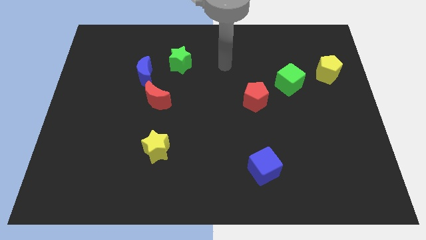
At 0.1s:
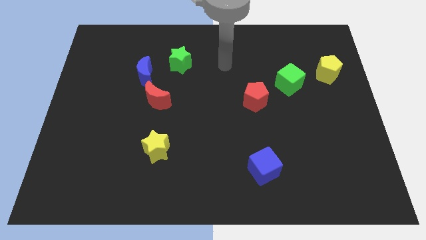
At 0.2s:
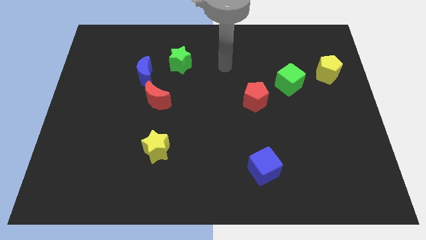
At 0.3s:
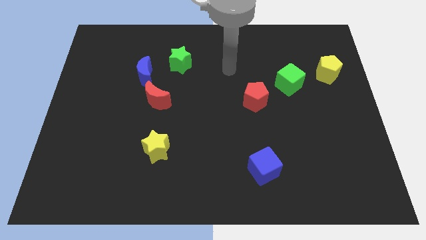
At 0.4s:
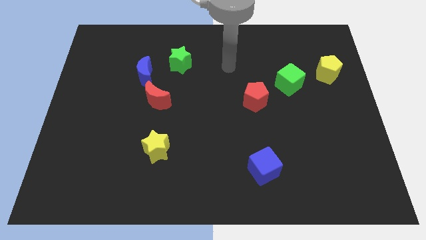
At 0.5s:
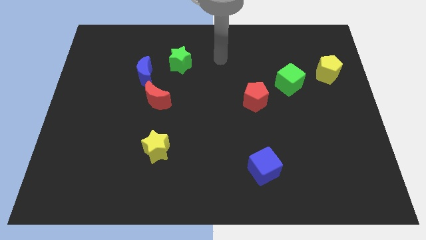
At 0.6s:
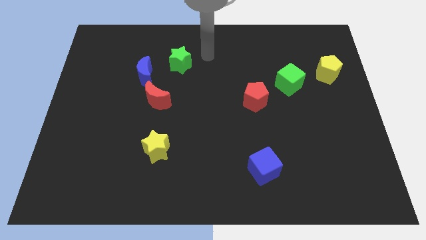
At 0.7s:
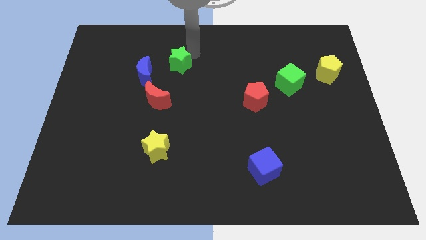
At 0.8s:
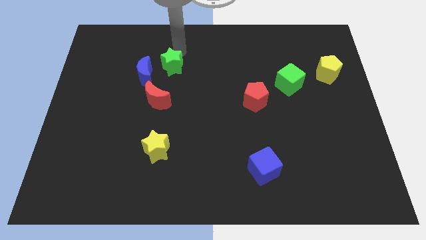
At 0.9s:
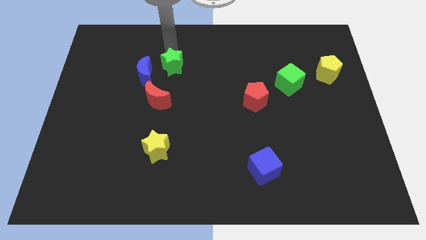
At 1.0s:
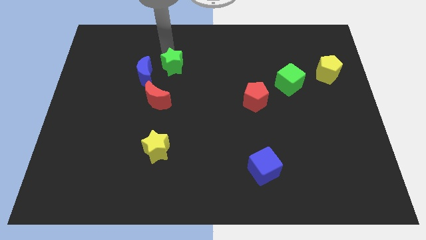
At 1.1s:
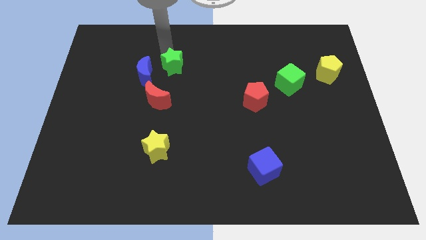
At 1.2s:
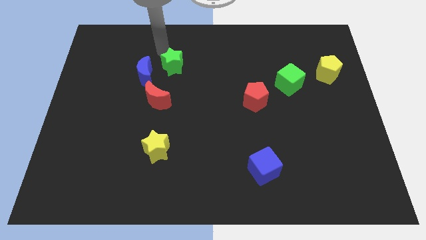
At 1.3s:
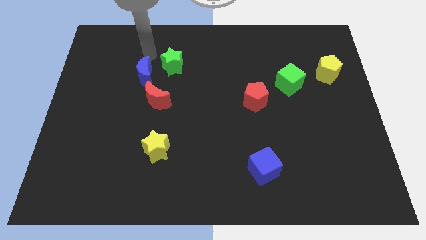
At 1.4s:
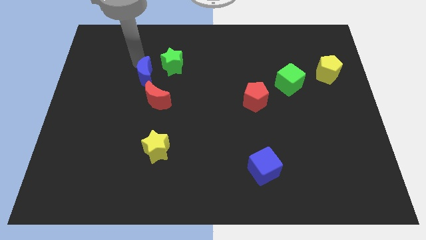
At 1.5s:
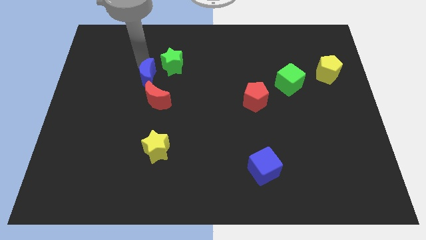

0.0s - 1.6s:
move the green star slightly towards the blue crescent

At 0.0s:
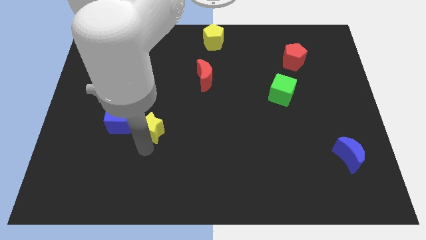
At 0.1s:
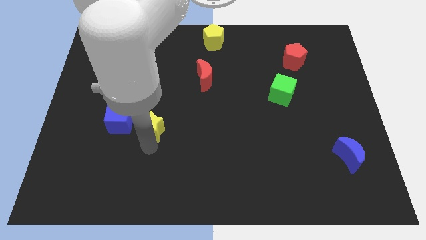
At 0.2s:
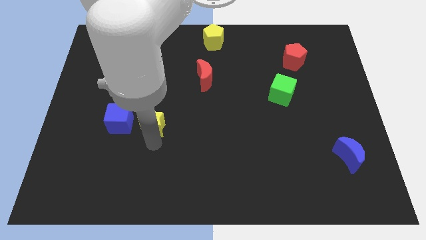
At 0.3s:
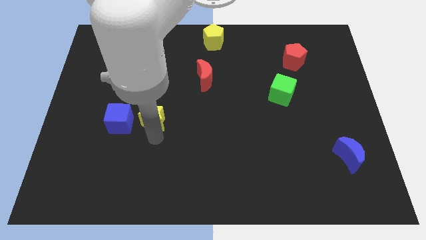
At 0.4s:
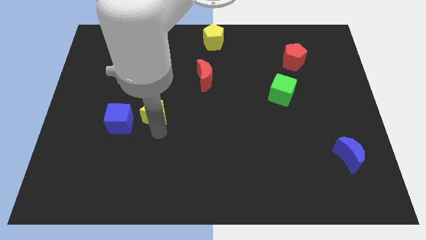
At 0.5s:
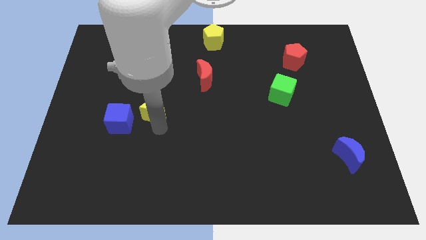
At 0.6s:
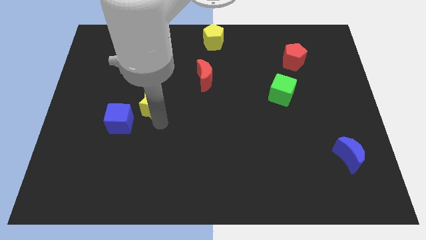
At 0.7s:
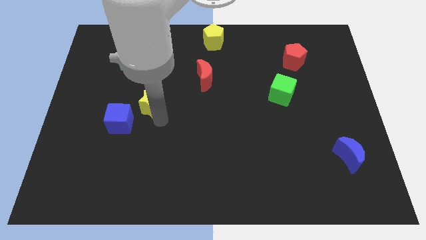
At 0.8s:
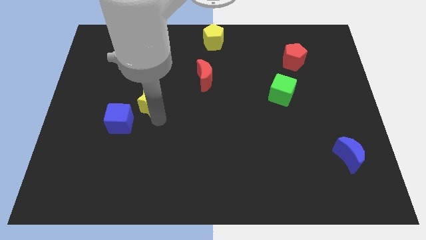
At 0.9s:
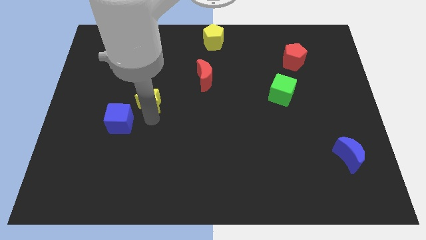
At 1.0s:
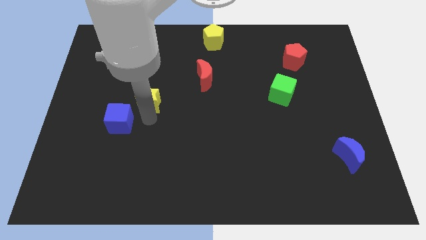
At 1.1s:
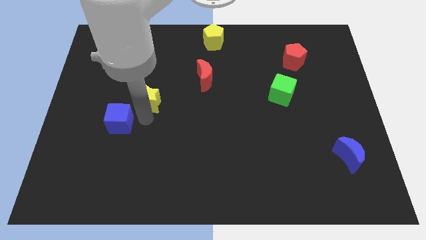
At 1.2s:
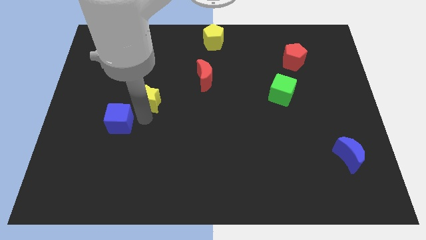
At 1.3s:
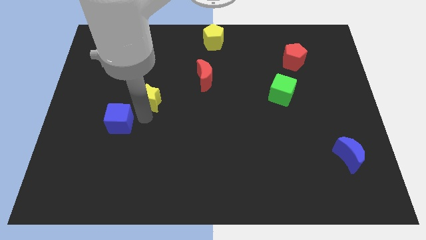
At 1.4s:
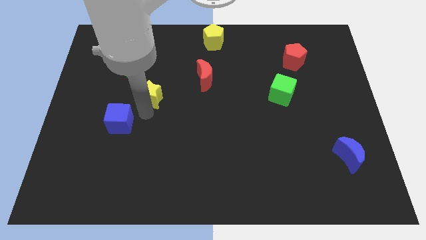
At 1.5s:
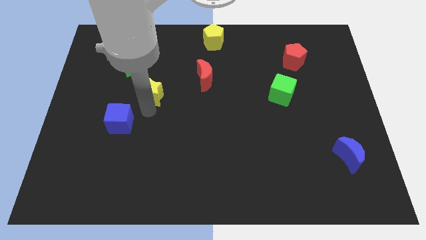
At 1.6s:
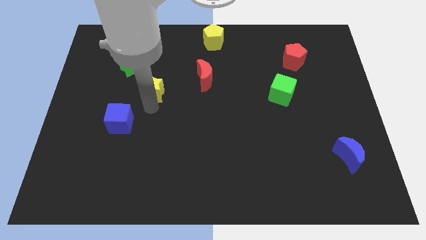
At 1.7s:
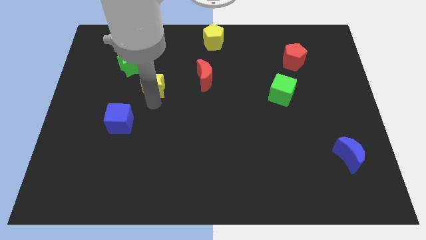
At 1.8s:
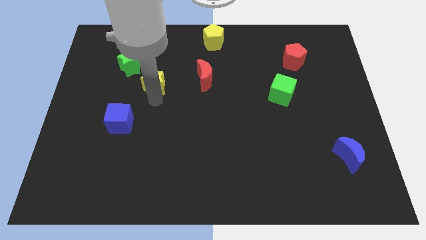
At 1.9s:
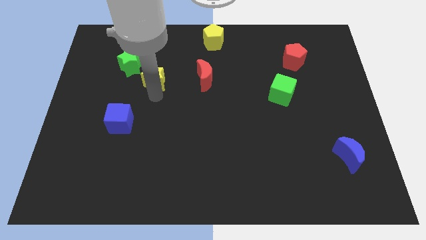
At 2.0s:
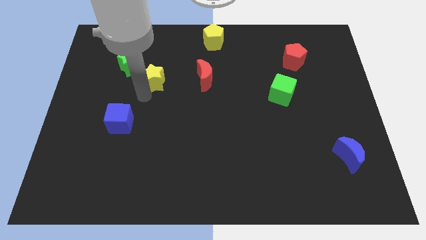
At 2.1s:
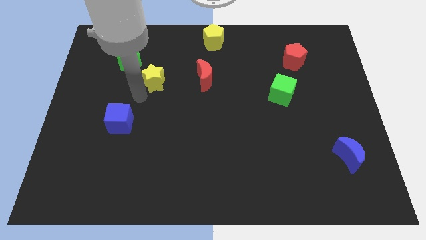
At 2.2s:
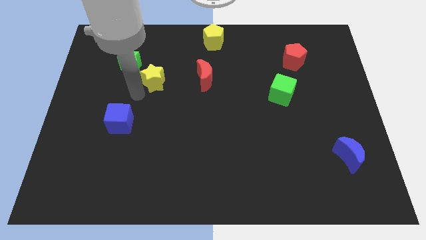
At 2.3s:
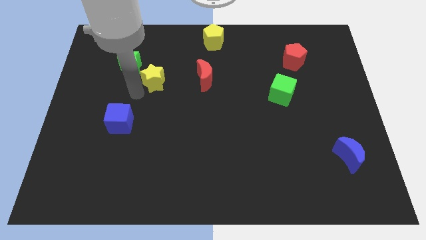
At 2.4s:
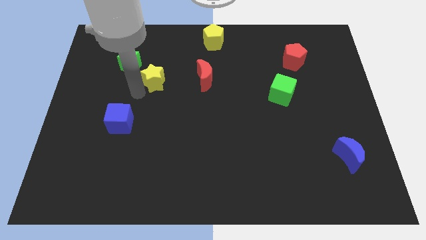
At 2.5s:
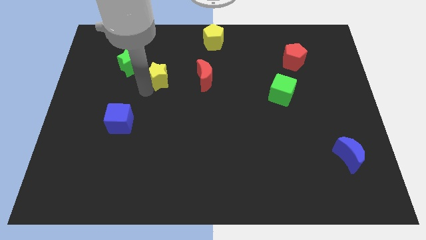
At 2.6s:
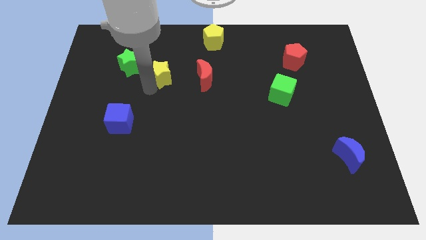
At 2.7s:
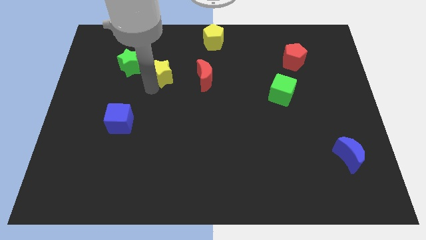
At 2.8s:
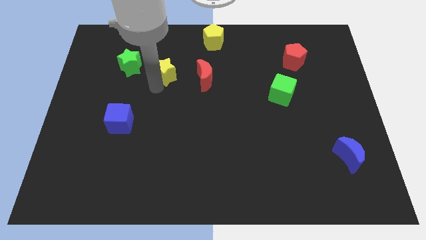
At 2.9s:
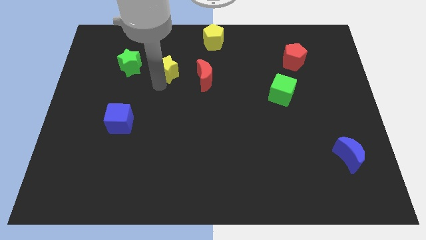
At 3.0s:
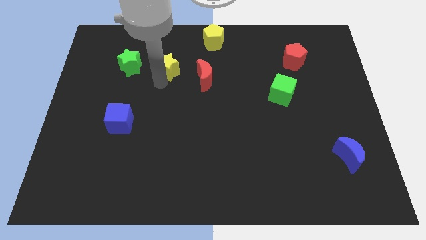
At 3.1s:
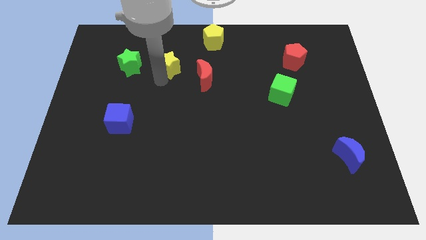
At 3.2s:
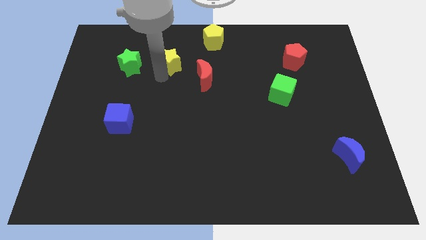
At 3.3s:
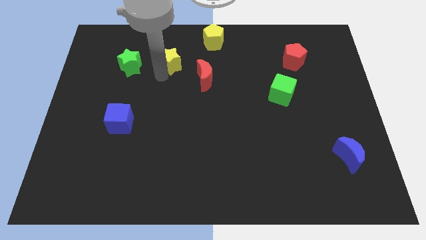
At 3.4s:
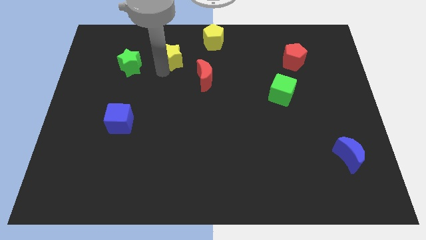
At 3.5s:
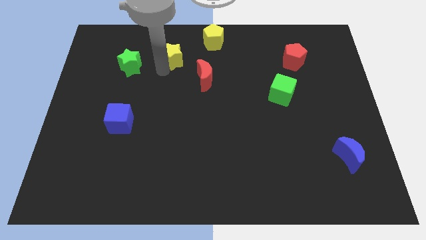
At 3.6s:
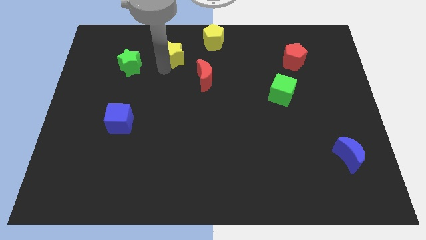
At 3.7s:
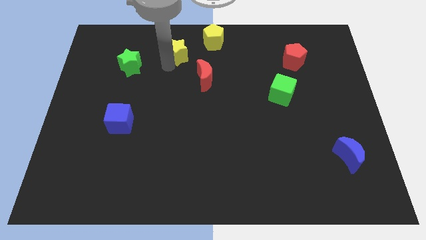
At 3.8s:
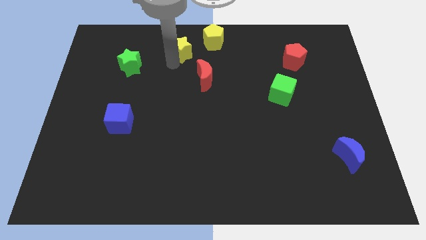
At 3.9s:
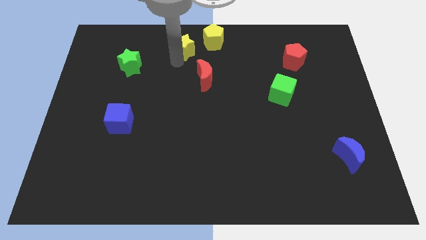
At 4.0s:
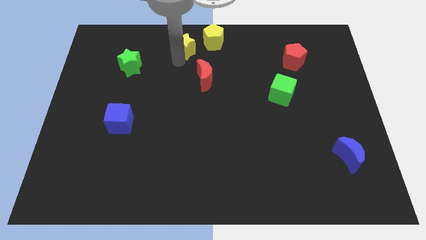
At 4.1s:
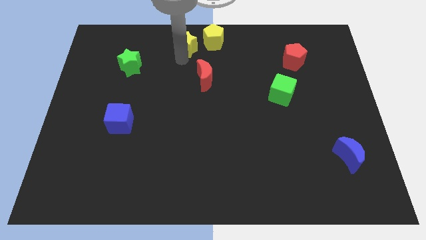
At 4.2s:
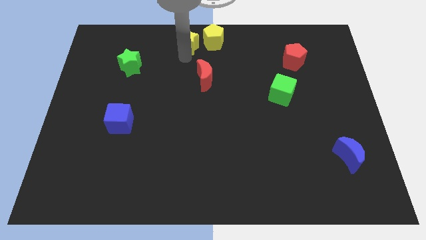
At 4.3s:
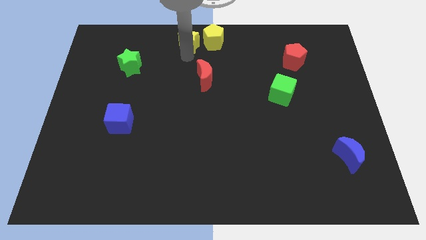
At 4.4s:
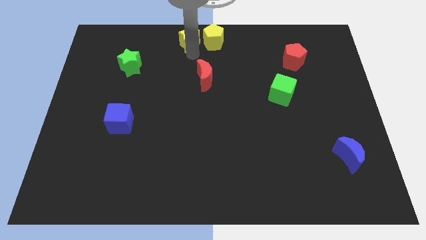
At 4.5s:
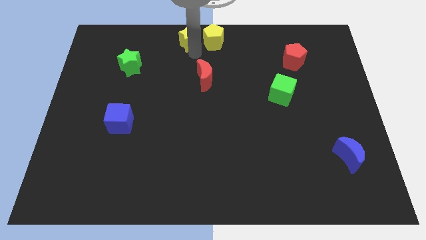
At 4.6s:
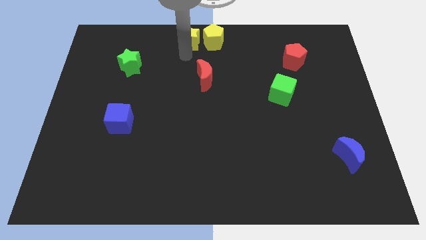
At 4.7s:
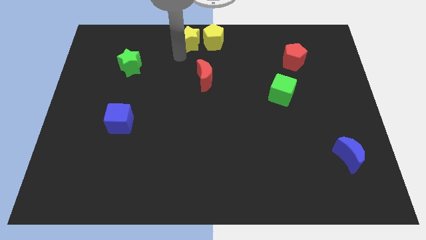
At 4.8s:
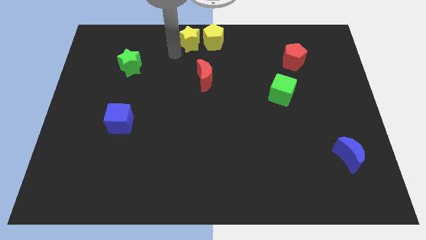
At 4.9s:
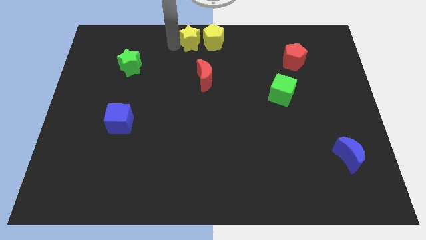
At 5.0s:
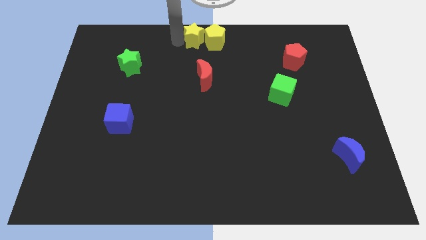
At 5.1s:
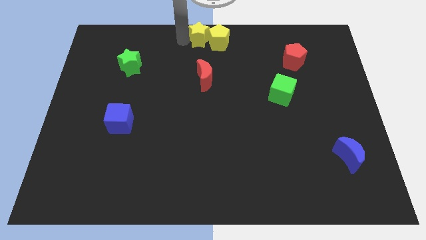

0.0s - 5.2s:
place the yellow star left to the yellow pentagon

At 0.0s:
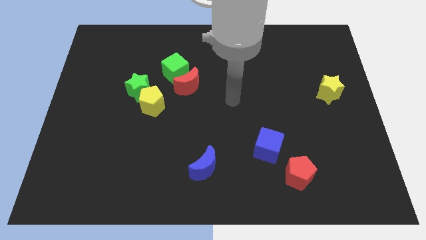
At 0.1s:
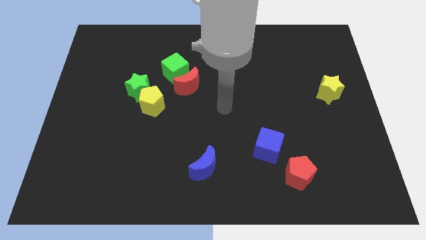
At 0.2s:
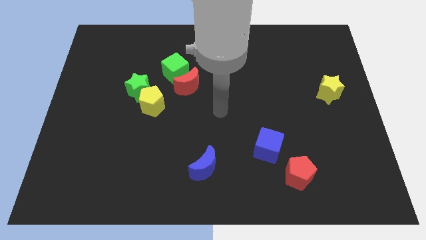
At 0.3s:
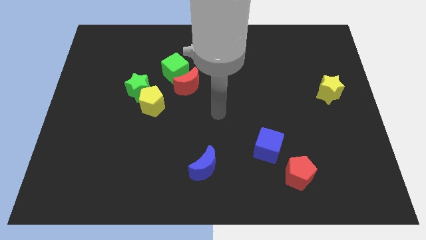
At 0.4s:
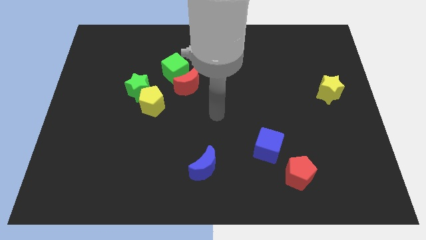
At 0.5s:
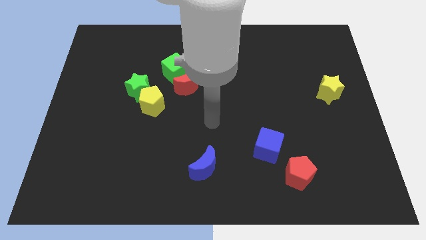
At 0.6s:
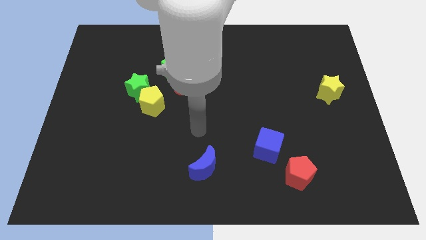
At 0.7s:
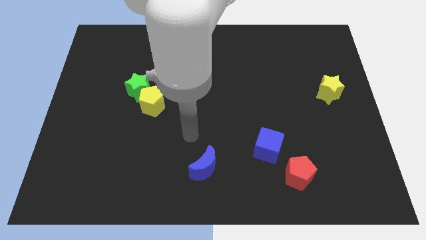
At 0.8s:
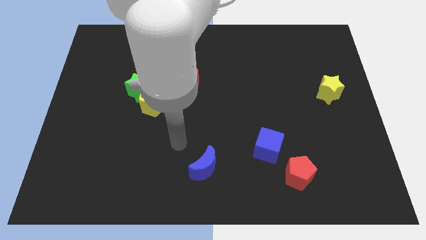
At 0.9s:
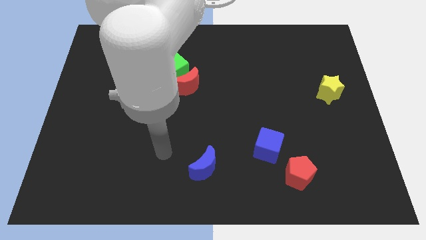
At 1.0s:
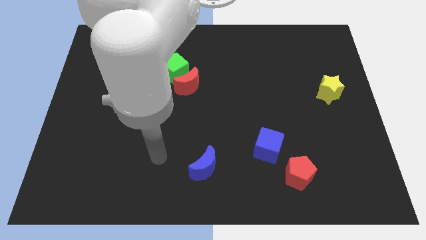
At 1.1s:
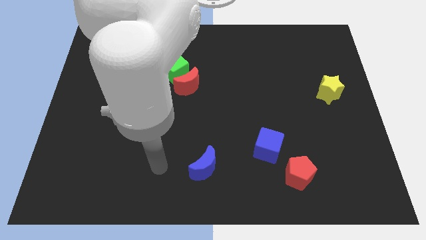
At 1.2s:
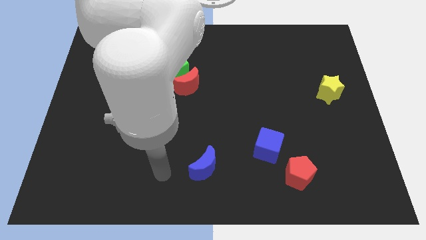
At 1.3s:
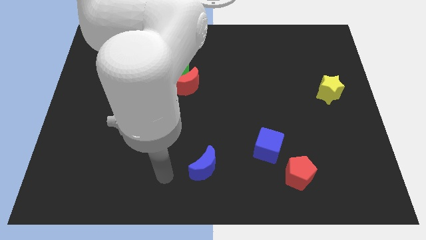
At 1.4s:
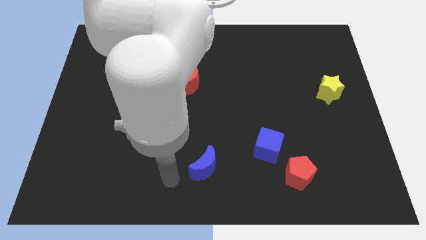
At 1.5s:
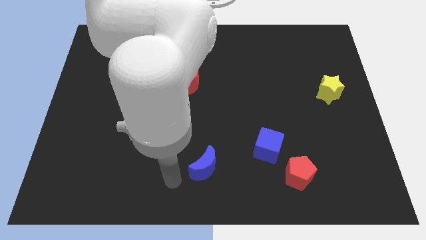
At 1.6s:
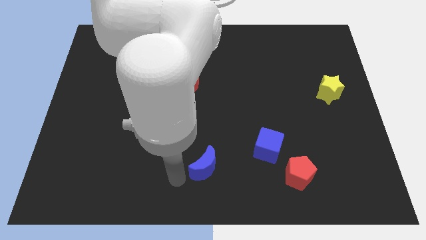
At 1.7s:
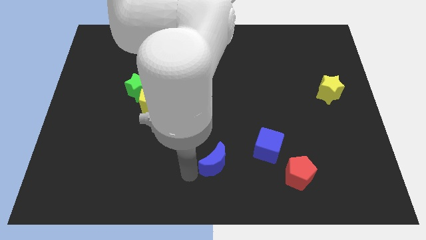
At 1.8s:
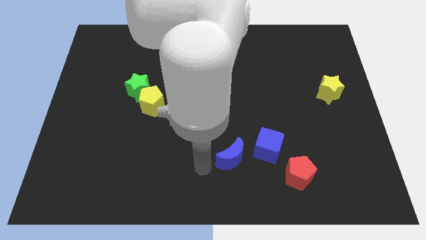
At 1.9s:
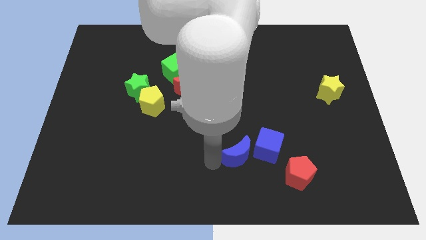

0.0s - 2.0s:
push blue crescent upwards

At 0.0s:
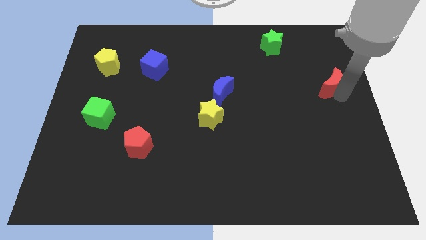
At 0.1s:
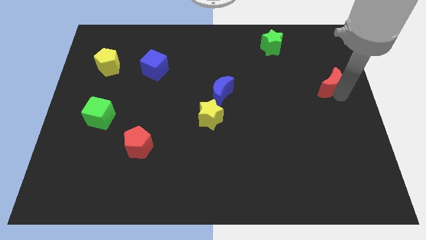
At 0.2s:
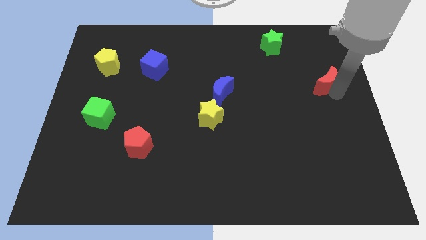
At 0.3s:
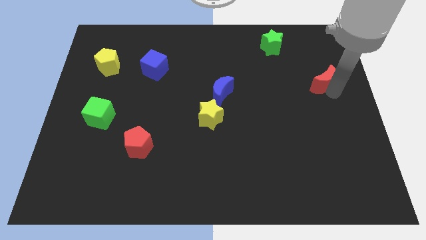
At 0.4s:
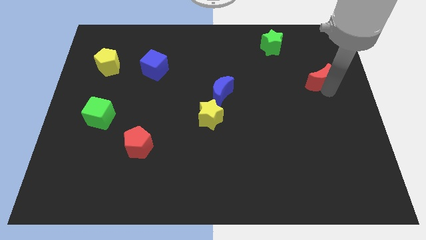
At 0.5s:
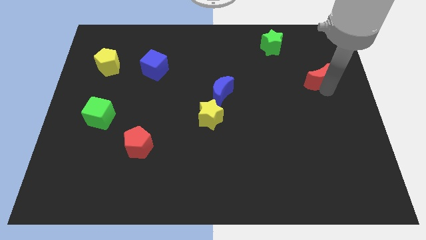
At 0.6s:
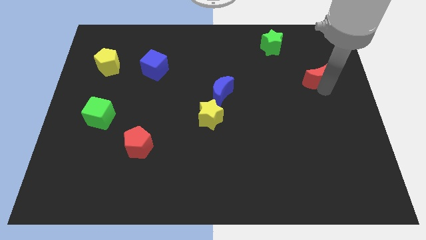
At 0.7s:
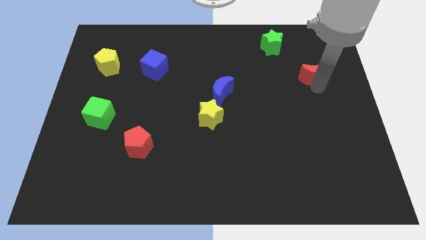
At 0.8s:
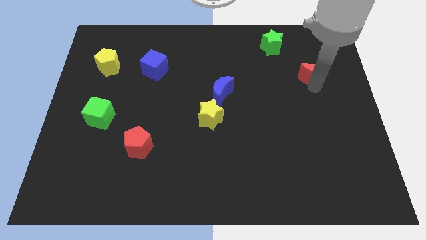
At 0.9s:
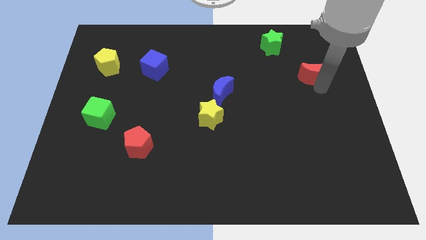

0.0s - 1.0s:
push the red crescent to the top of the board
